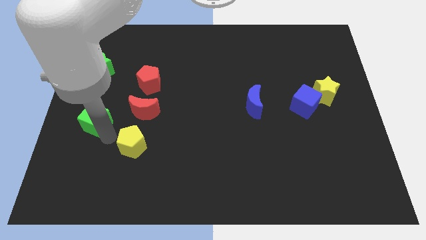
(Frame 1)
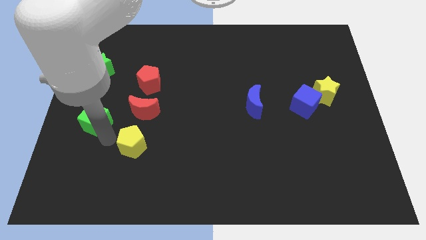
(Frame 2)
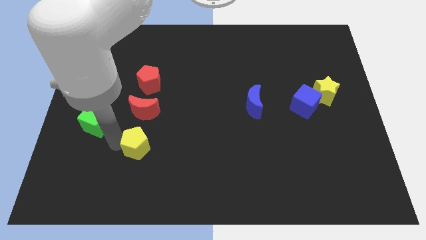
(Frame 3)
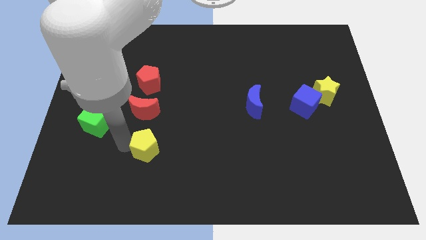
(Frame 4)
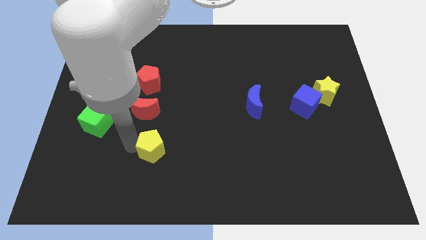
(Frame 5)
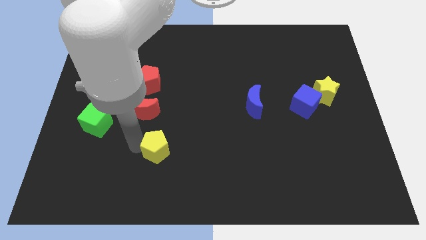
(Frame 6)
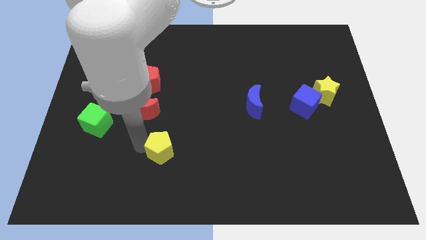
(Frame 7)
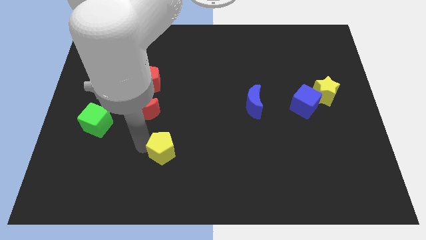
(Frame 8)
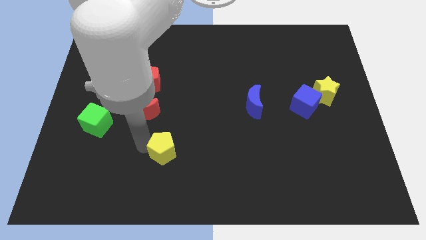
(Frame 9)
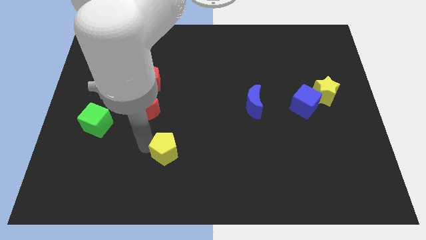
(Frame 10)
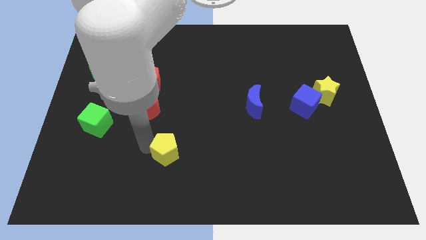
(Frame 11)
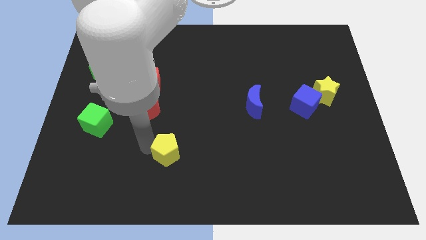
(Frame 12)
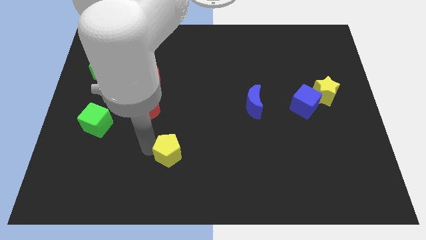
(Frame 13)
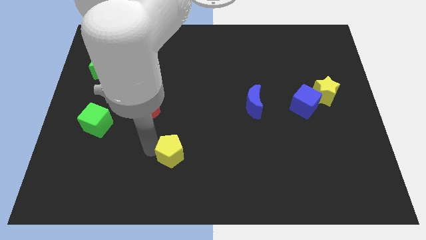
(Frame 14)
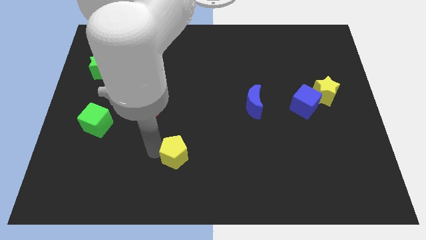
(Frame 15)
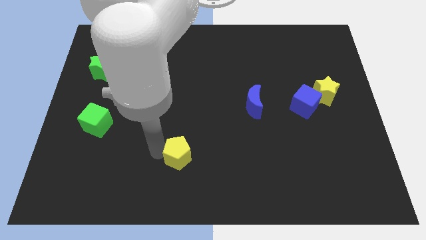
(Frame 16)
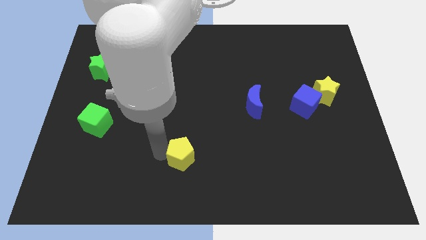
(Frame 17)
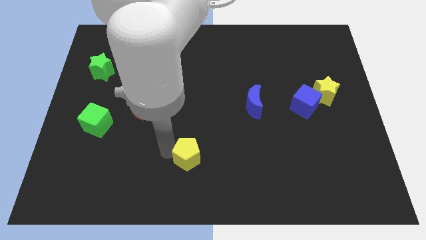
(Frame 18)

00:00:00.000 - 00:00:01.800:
place the yellow pentagon diagonally to the red moon

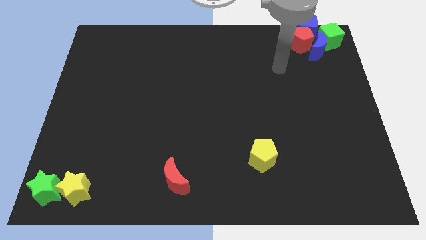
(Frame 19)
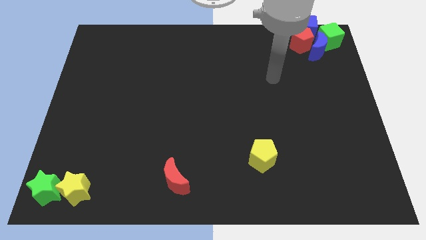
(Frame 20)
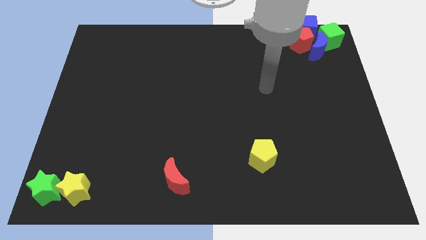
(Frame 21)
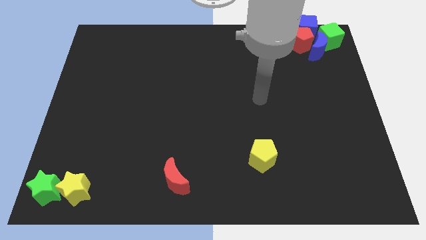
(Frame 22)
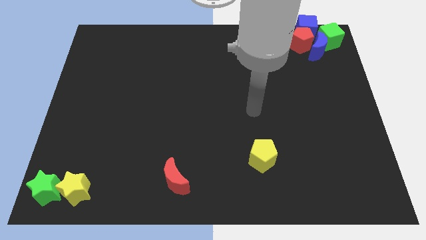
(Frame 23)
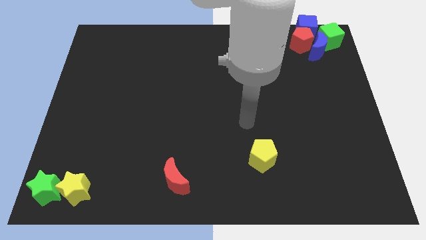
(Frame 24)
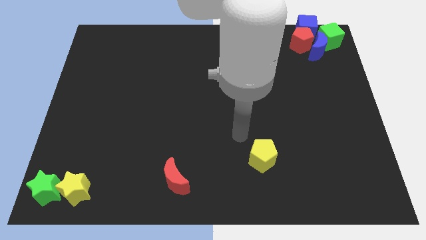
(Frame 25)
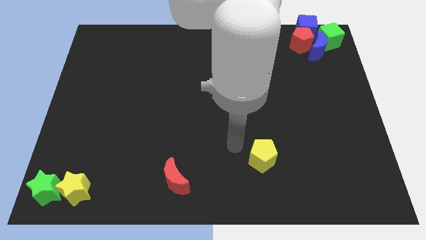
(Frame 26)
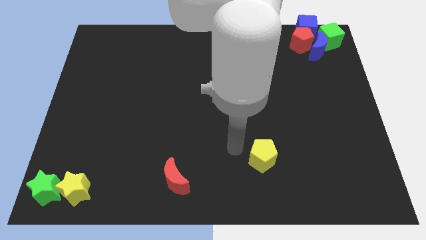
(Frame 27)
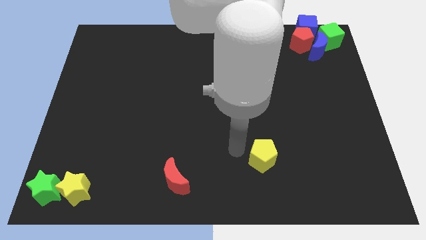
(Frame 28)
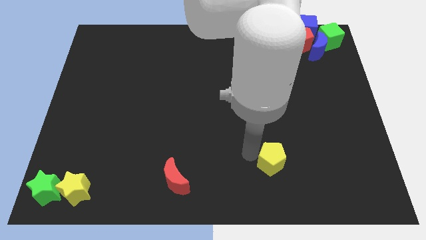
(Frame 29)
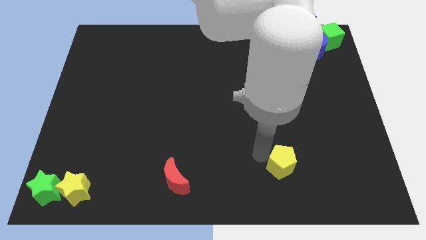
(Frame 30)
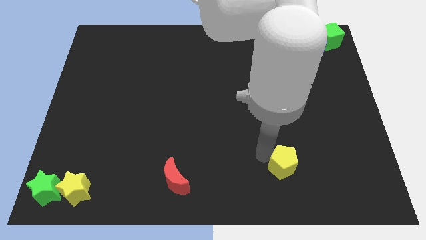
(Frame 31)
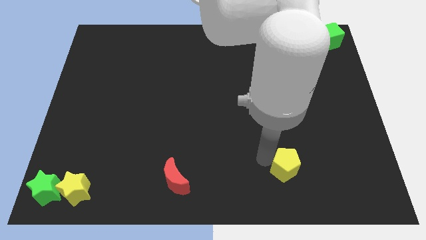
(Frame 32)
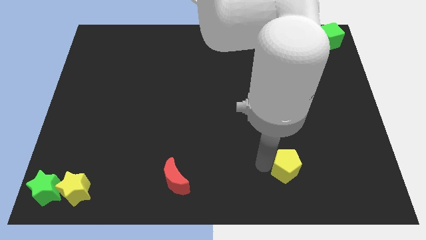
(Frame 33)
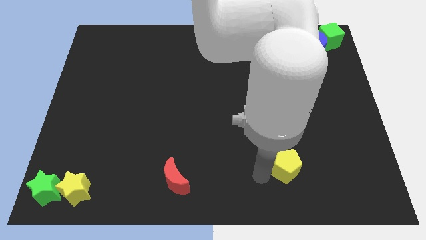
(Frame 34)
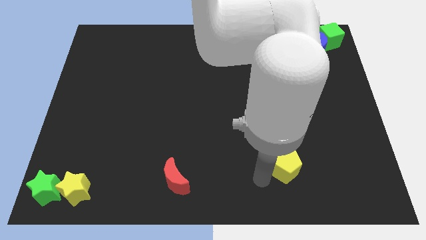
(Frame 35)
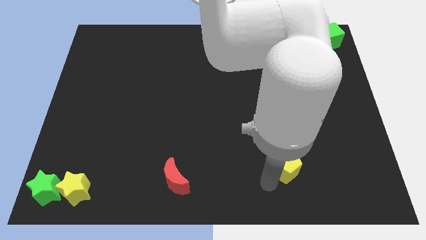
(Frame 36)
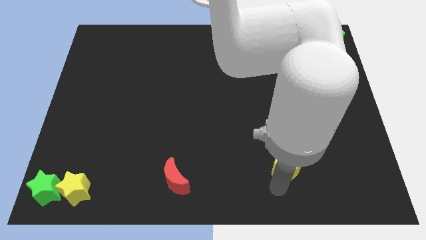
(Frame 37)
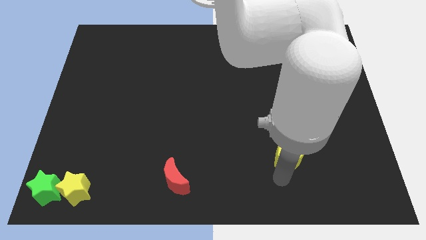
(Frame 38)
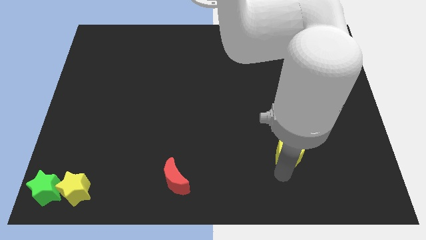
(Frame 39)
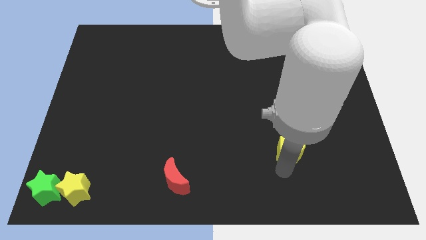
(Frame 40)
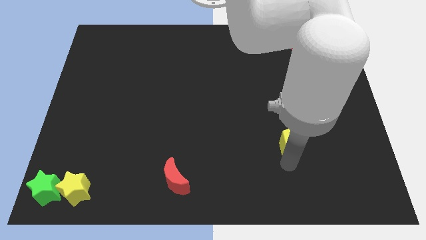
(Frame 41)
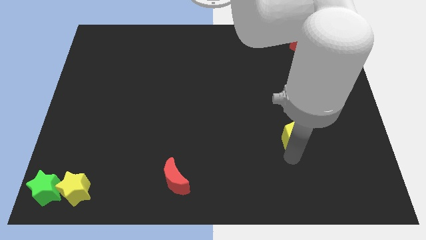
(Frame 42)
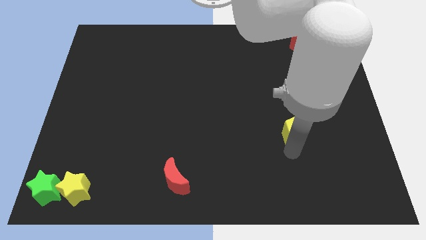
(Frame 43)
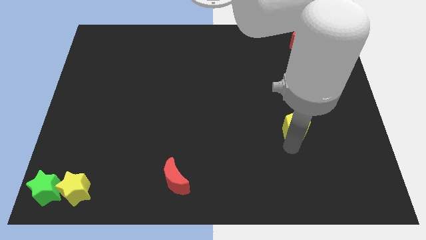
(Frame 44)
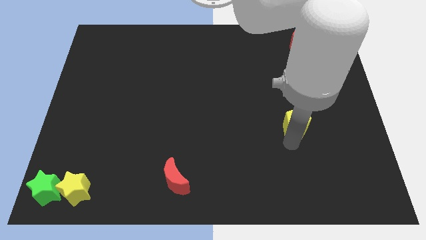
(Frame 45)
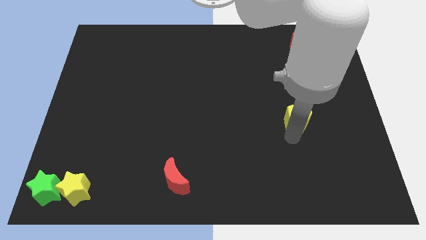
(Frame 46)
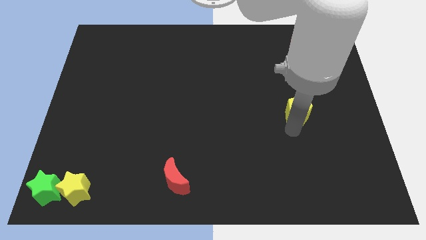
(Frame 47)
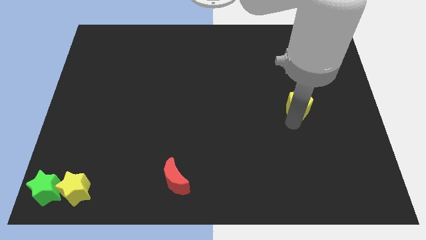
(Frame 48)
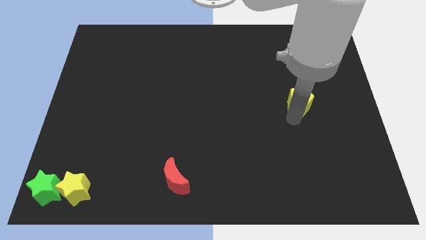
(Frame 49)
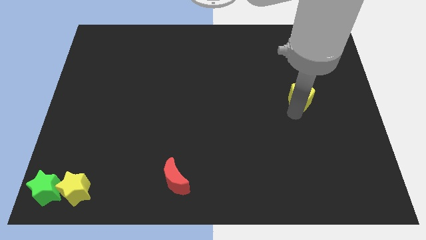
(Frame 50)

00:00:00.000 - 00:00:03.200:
move yellow pentagon towards up

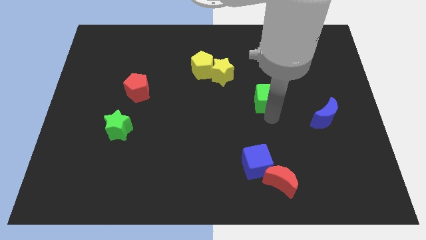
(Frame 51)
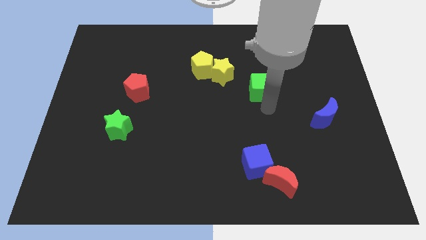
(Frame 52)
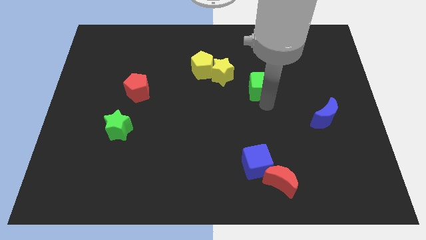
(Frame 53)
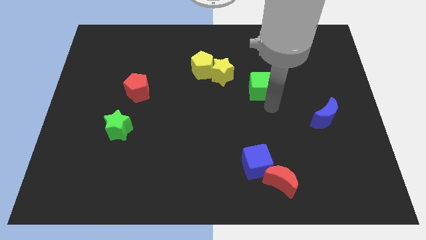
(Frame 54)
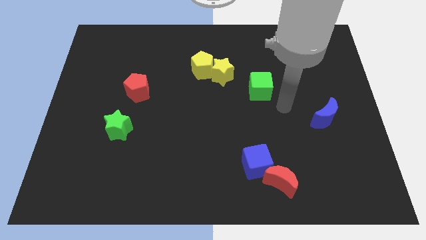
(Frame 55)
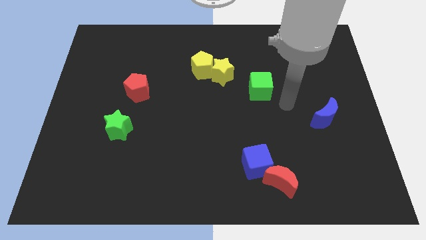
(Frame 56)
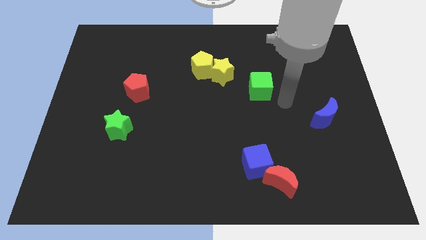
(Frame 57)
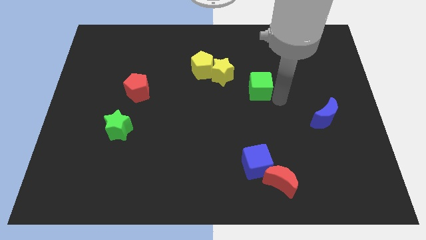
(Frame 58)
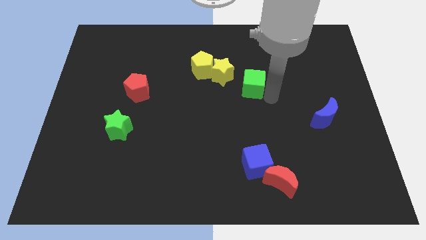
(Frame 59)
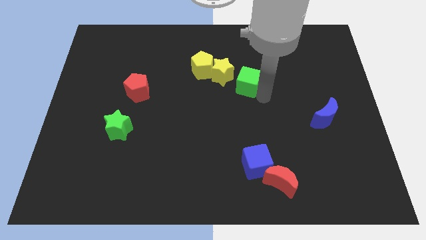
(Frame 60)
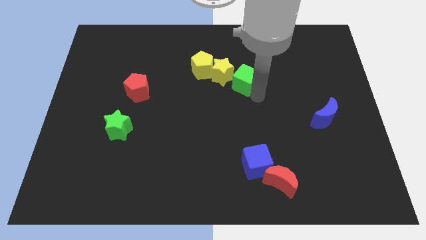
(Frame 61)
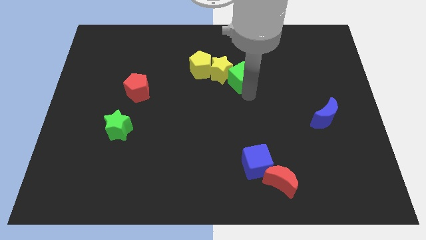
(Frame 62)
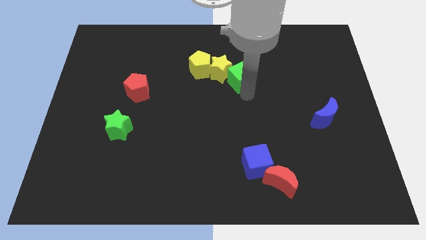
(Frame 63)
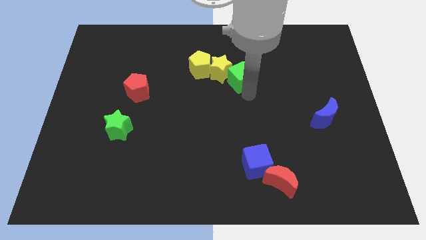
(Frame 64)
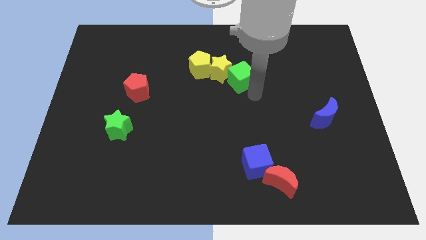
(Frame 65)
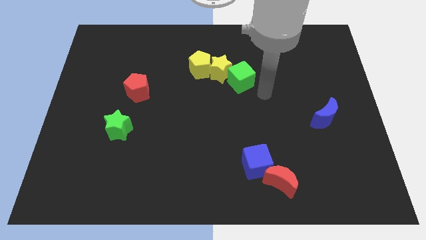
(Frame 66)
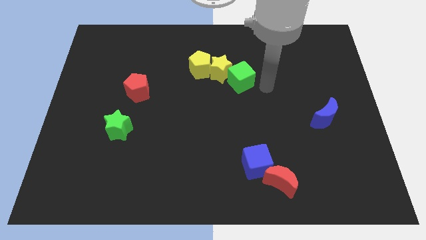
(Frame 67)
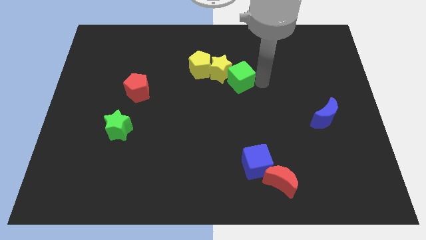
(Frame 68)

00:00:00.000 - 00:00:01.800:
push the green cube to the right side of the yellow star

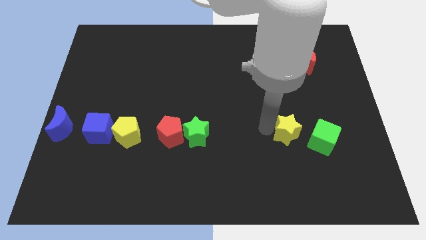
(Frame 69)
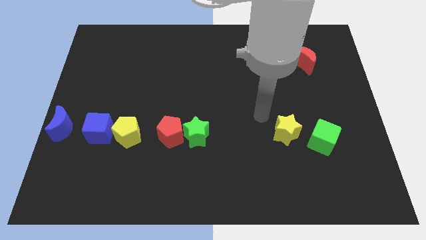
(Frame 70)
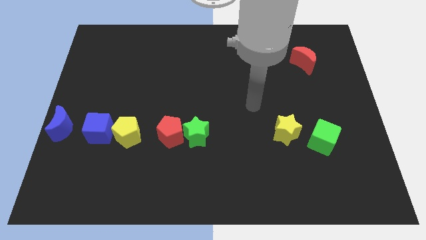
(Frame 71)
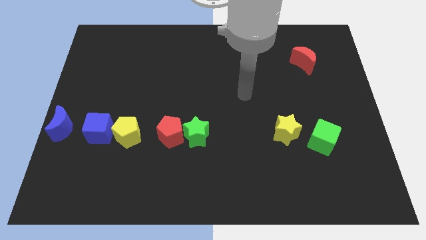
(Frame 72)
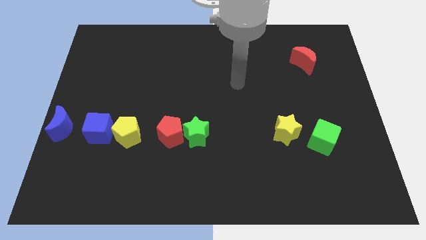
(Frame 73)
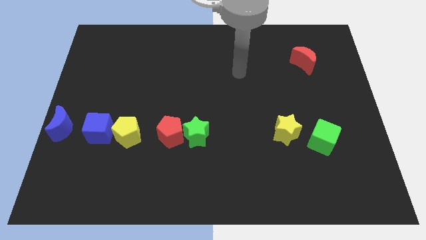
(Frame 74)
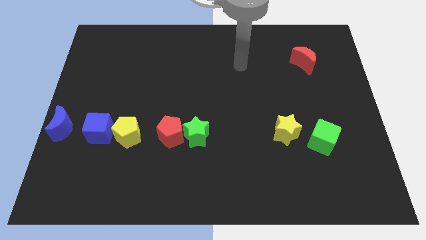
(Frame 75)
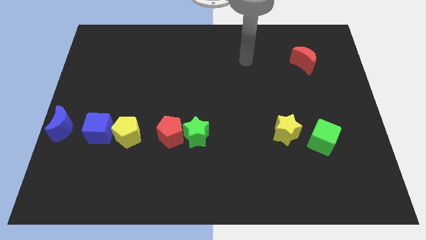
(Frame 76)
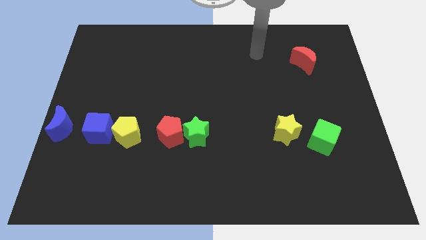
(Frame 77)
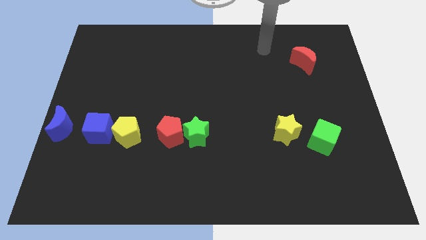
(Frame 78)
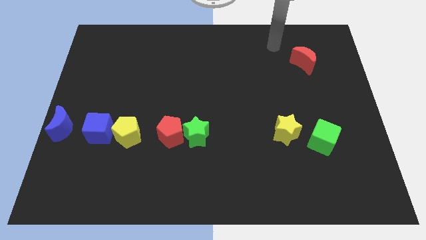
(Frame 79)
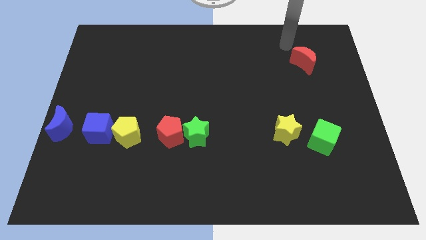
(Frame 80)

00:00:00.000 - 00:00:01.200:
place your arm to the top left side of the red moon

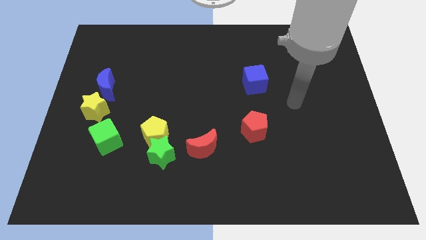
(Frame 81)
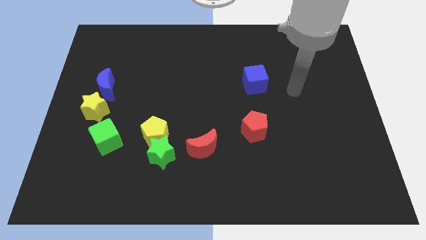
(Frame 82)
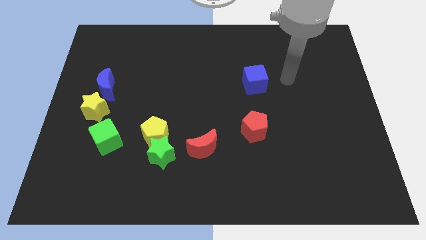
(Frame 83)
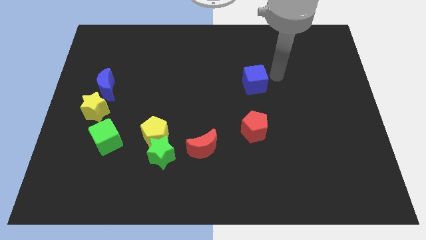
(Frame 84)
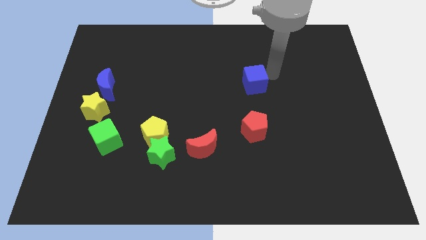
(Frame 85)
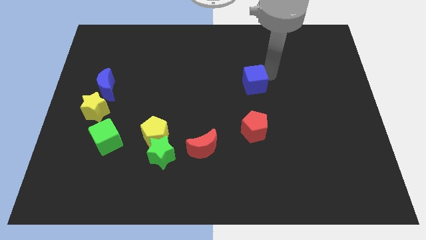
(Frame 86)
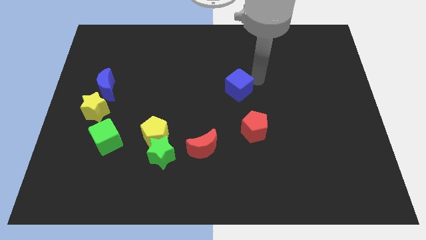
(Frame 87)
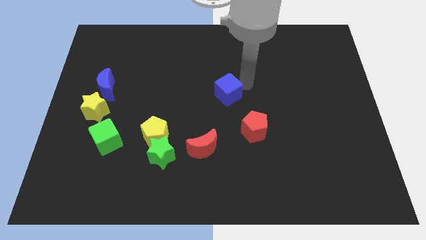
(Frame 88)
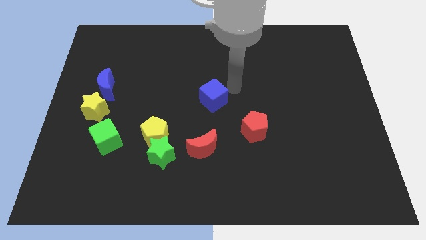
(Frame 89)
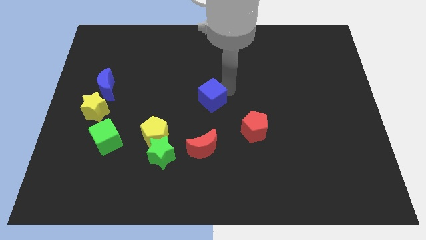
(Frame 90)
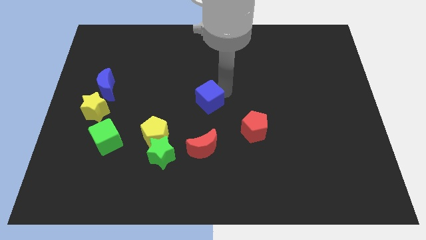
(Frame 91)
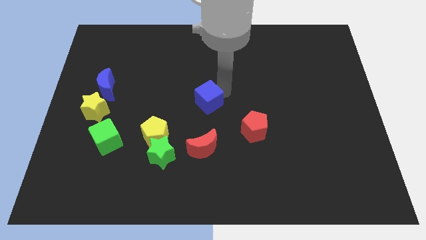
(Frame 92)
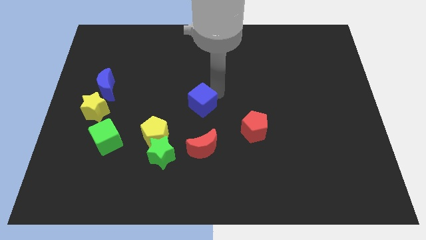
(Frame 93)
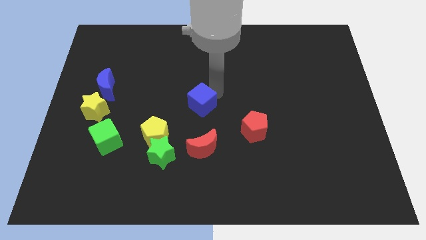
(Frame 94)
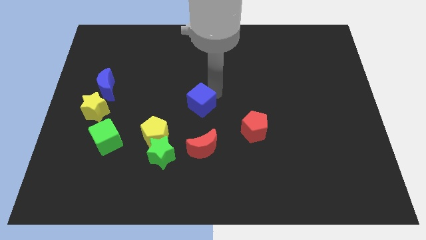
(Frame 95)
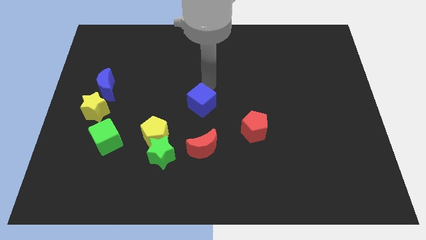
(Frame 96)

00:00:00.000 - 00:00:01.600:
place the blue cube above the red moon
